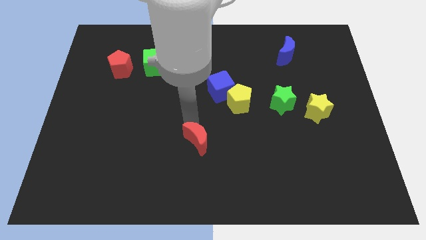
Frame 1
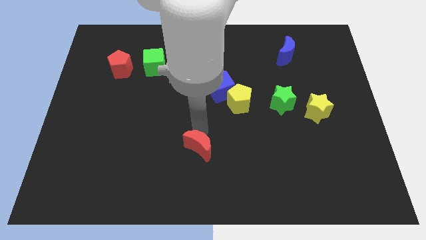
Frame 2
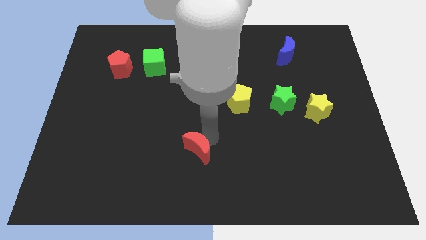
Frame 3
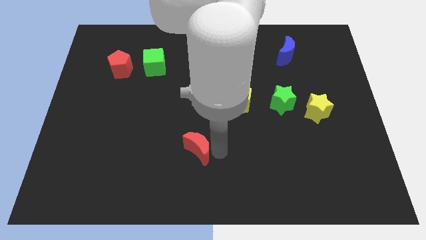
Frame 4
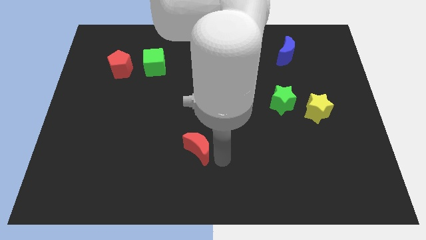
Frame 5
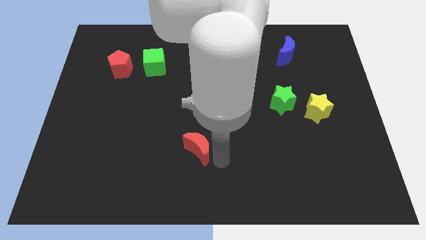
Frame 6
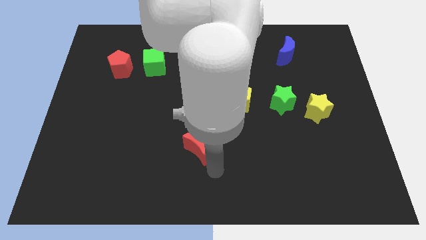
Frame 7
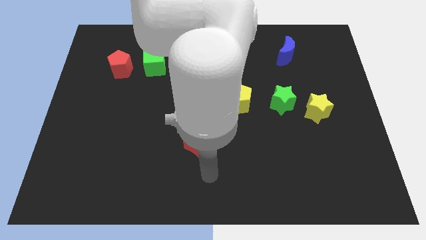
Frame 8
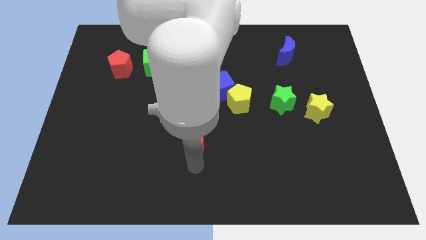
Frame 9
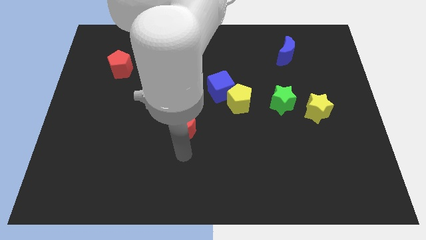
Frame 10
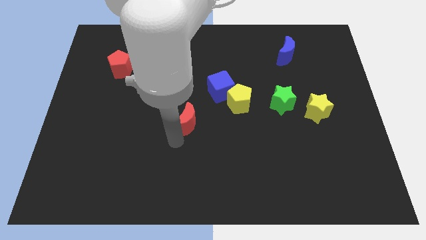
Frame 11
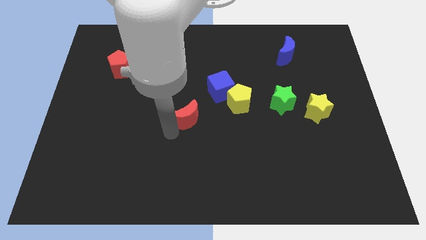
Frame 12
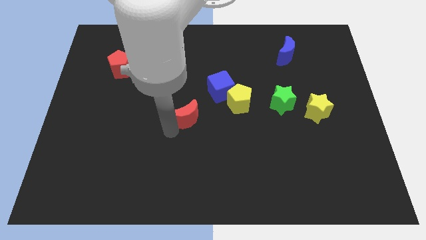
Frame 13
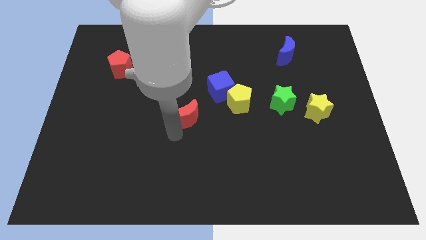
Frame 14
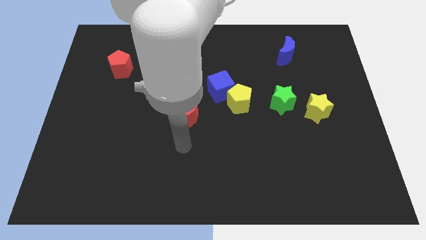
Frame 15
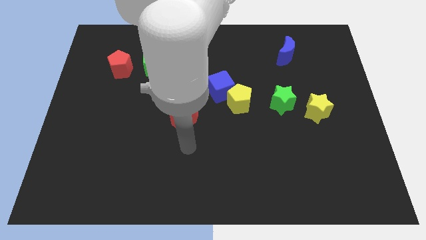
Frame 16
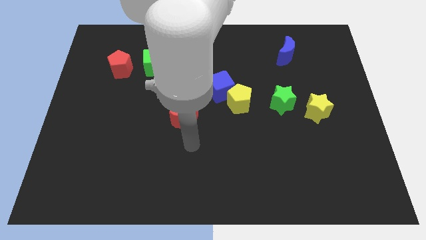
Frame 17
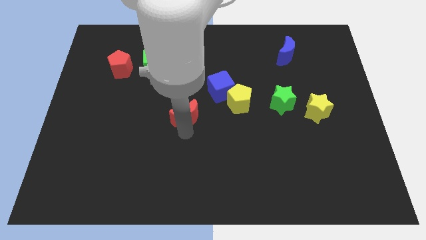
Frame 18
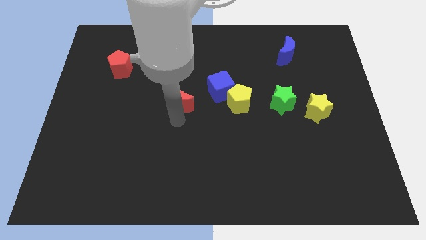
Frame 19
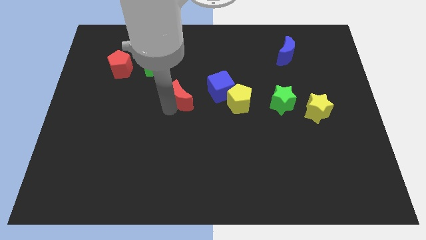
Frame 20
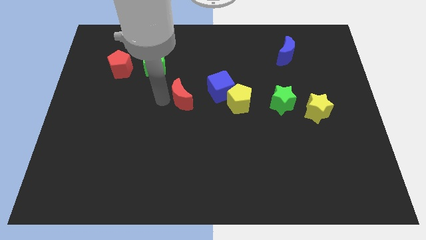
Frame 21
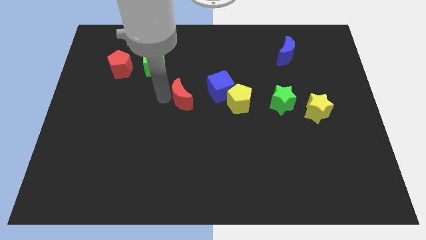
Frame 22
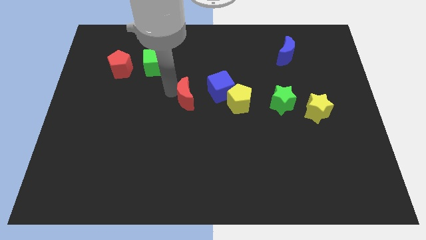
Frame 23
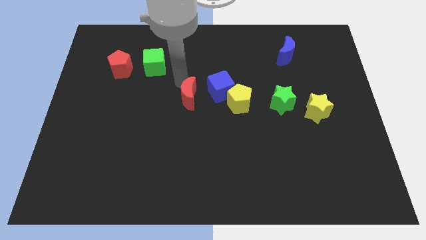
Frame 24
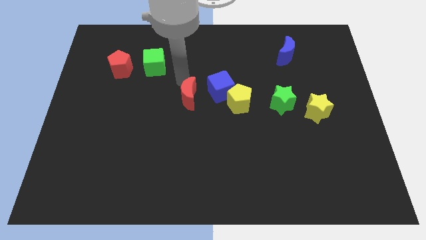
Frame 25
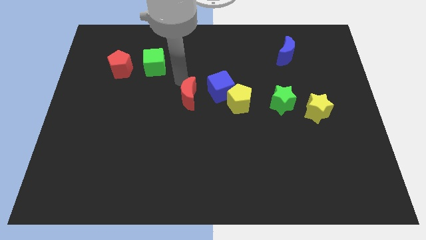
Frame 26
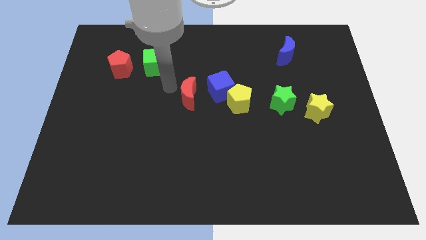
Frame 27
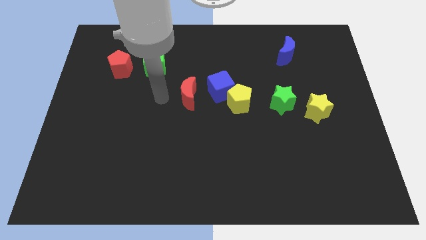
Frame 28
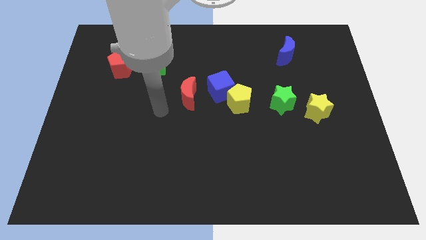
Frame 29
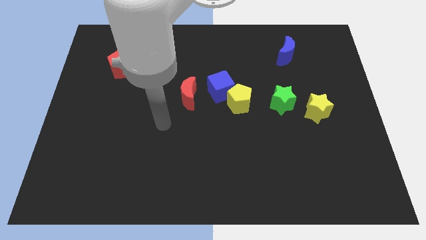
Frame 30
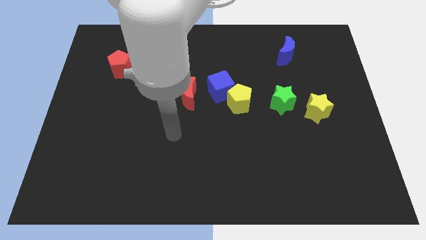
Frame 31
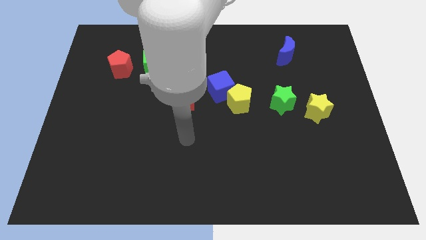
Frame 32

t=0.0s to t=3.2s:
take the red moon to the left side of the blue cube

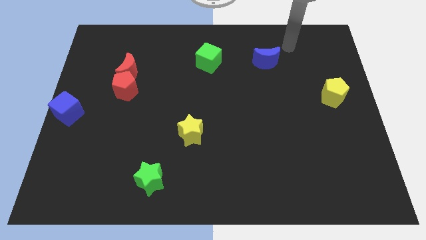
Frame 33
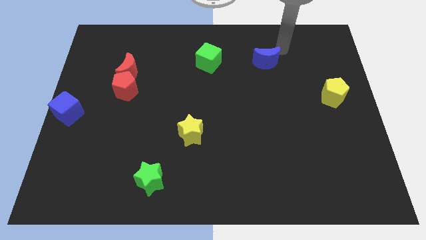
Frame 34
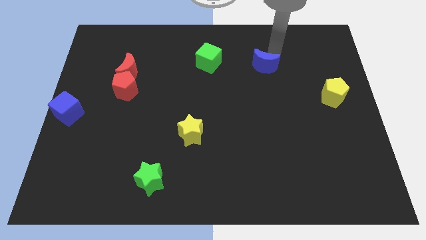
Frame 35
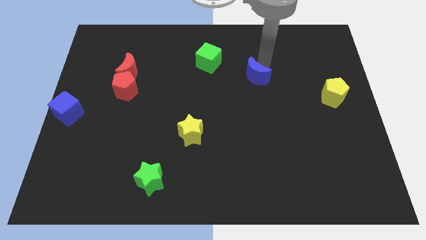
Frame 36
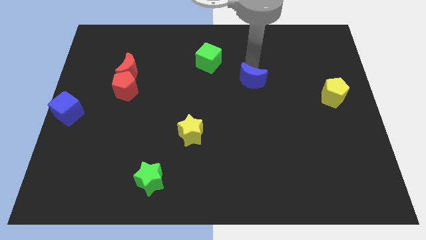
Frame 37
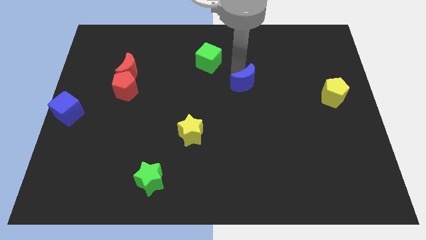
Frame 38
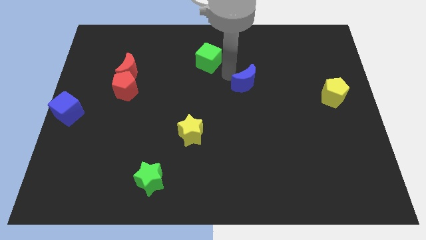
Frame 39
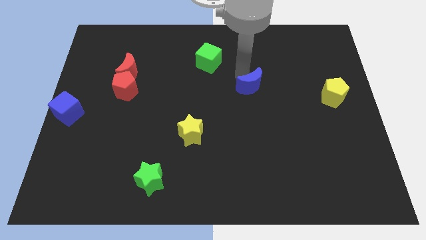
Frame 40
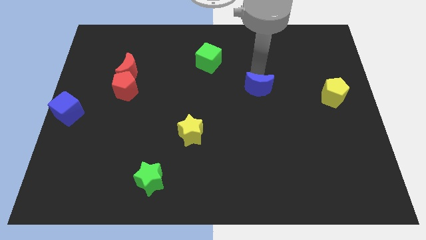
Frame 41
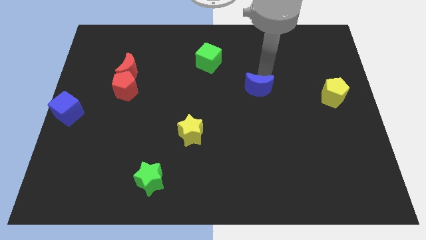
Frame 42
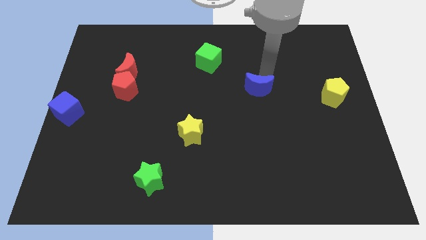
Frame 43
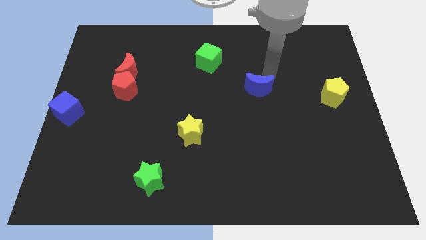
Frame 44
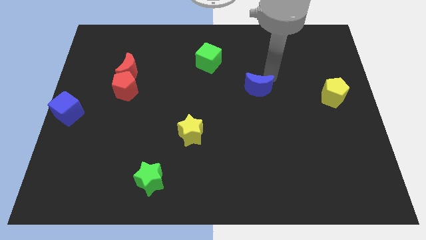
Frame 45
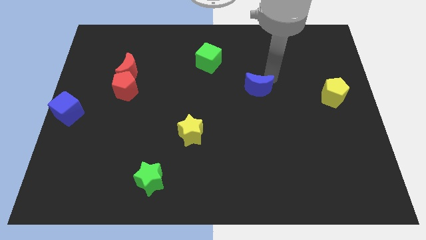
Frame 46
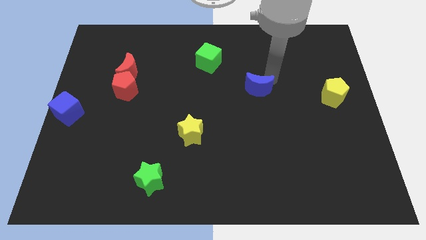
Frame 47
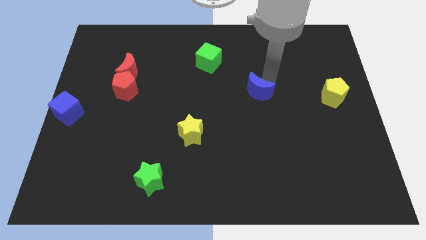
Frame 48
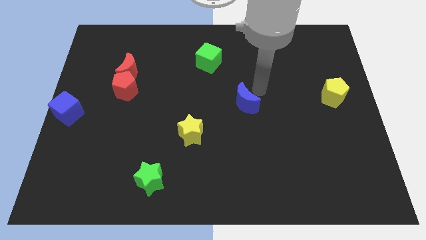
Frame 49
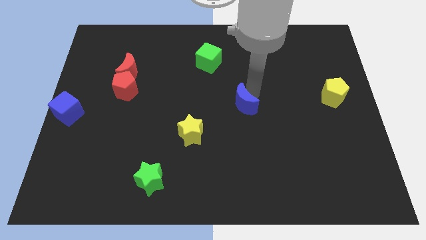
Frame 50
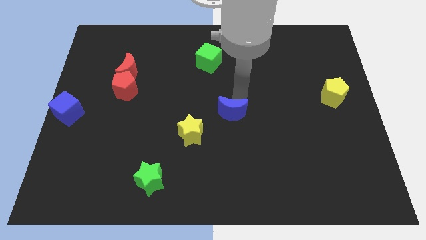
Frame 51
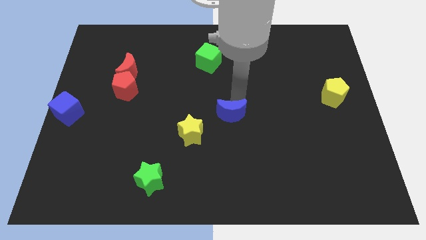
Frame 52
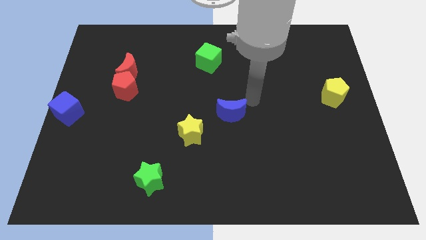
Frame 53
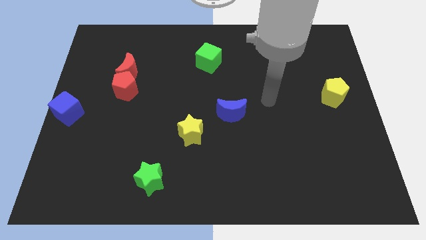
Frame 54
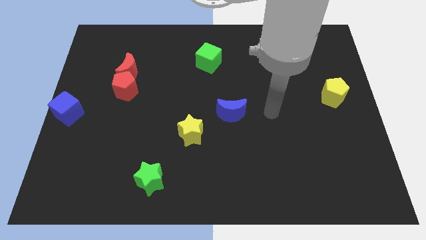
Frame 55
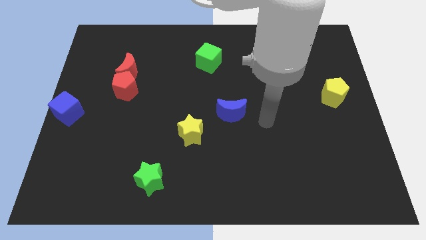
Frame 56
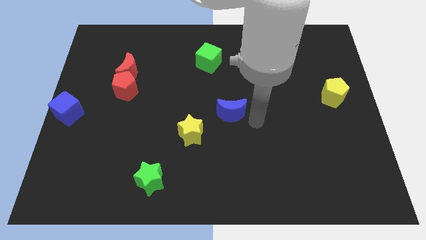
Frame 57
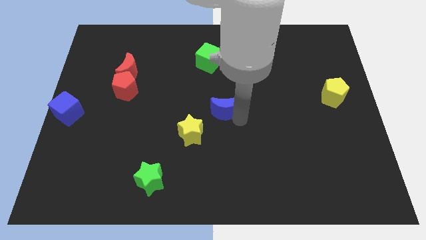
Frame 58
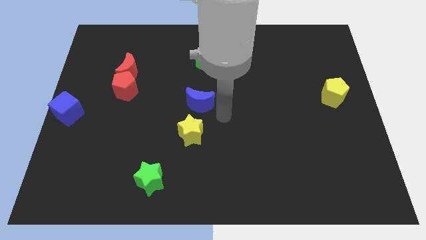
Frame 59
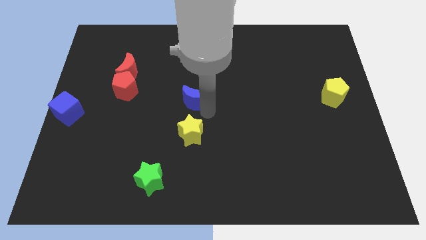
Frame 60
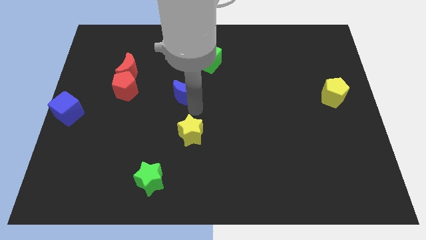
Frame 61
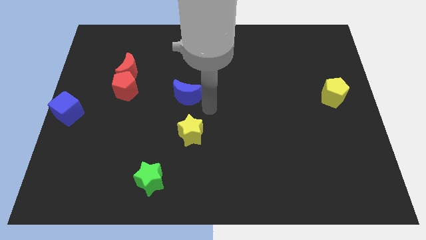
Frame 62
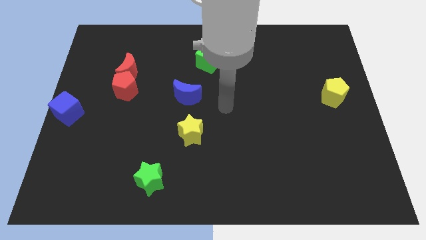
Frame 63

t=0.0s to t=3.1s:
place blue moon on top of yellow star

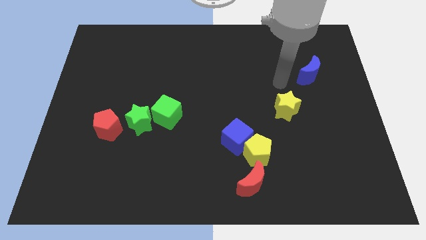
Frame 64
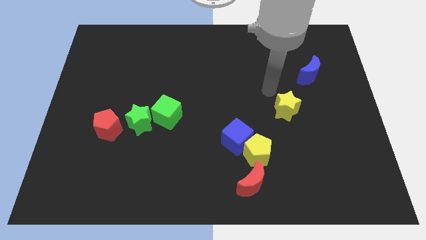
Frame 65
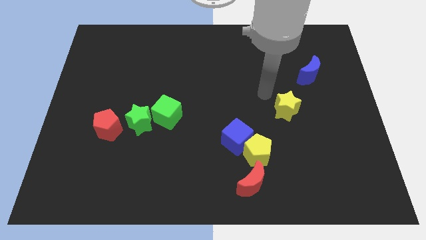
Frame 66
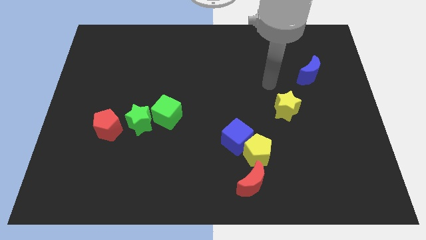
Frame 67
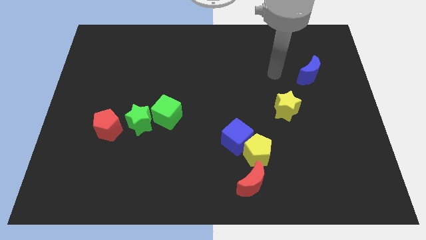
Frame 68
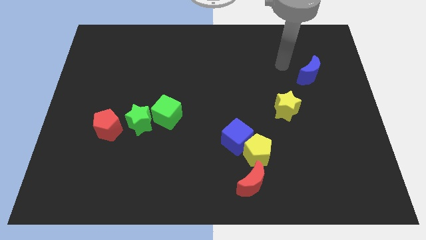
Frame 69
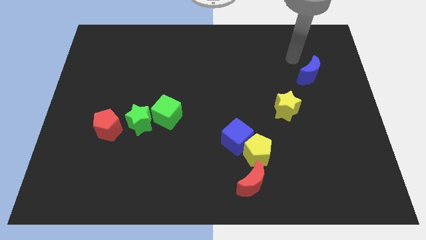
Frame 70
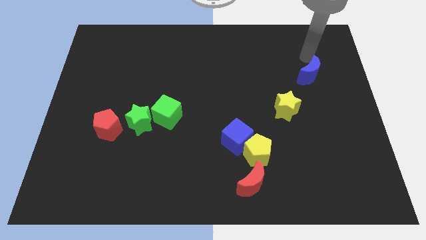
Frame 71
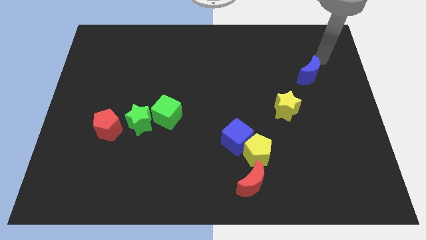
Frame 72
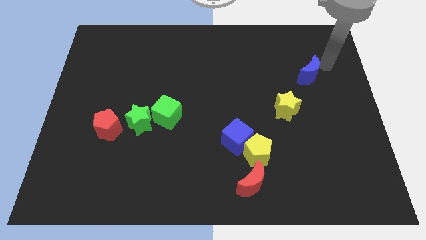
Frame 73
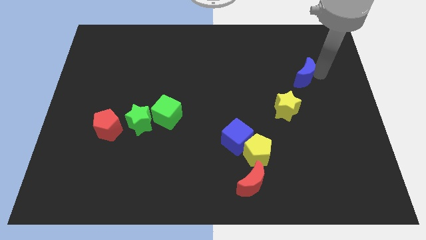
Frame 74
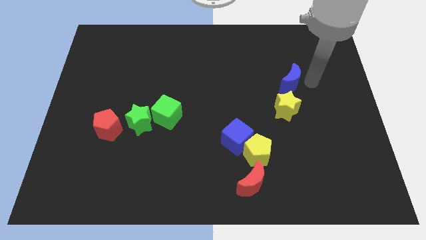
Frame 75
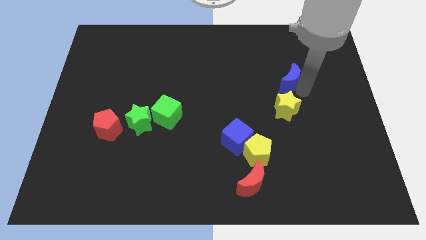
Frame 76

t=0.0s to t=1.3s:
move blue moon close to the yellow star

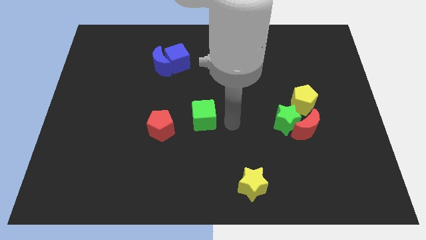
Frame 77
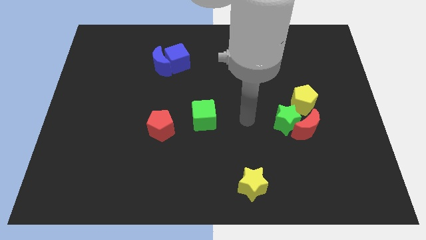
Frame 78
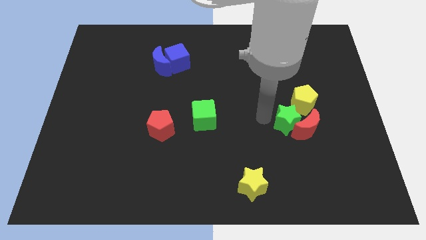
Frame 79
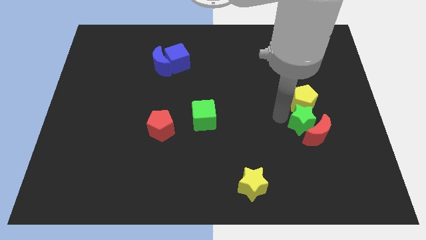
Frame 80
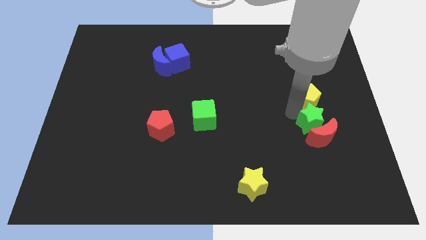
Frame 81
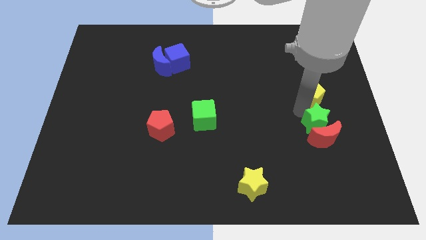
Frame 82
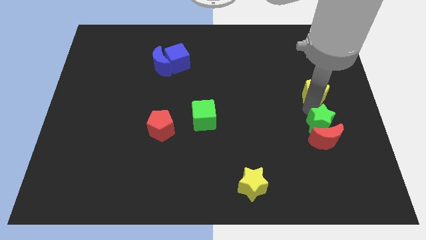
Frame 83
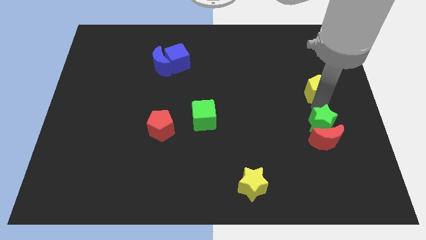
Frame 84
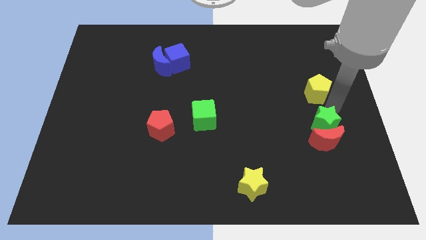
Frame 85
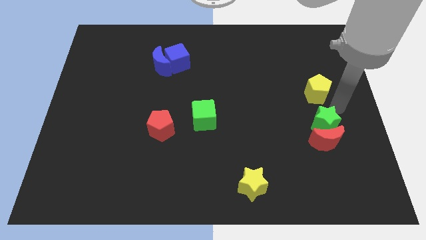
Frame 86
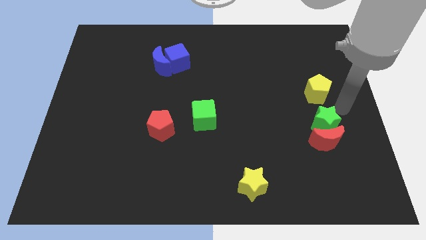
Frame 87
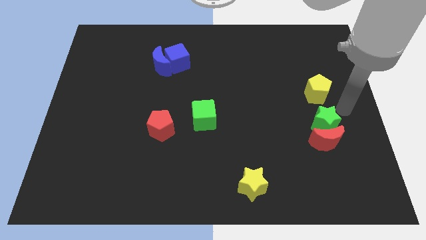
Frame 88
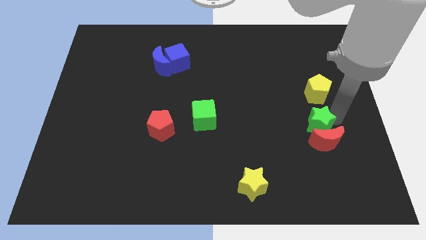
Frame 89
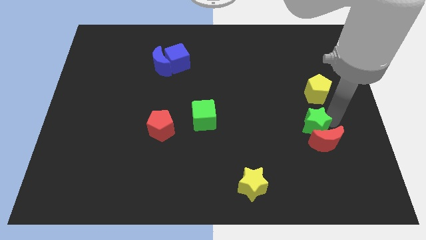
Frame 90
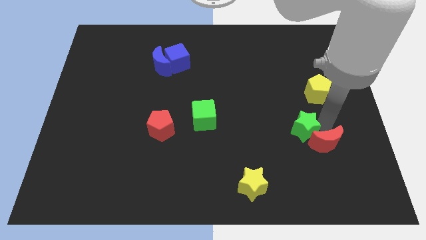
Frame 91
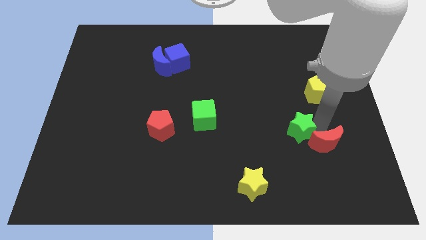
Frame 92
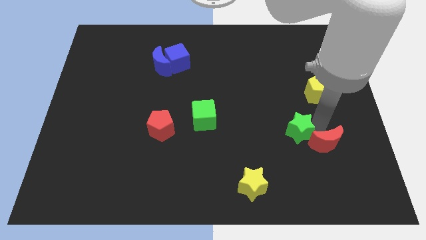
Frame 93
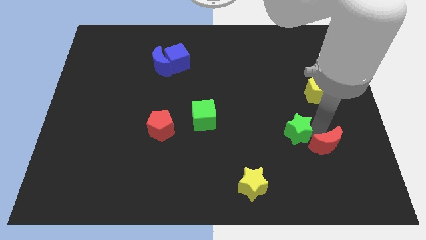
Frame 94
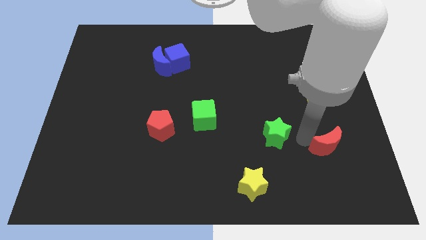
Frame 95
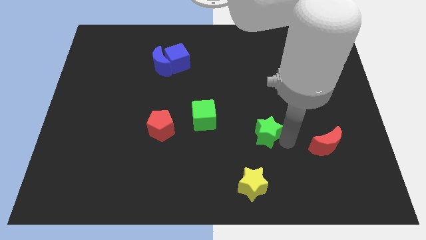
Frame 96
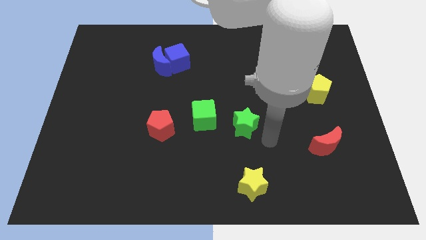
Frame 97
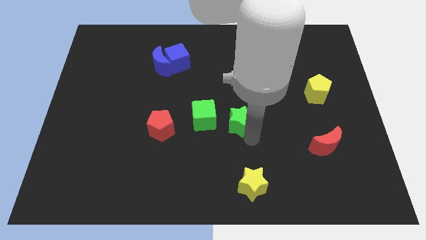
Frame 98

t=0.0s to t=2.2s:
push the green star yellow pentagon and red moon in different directions
